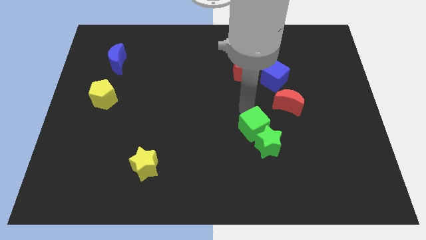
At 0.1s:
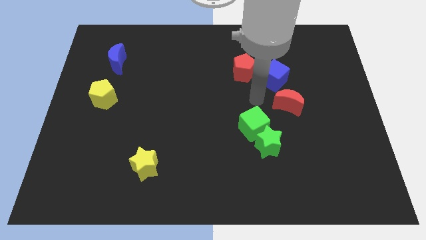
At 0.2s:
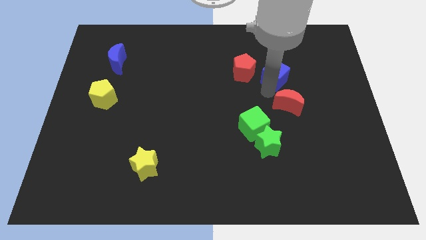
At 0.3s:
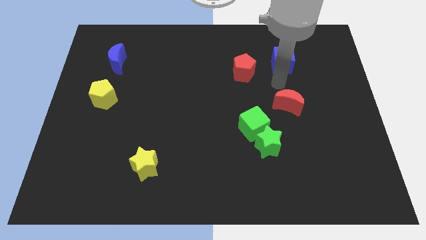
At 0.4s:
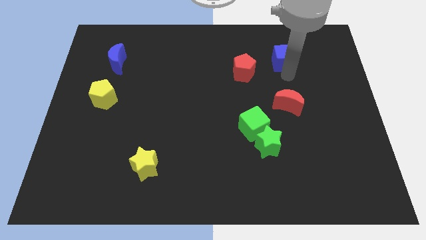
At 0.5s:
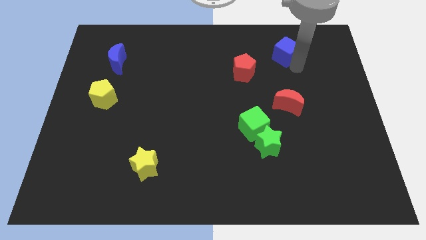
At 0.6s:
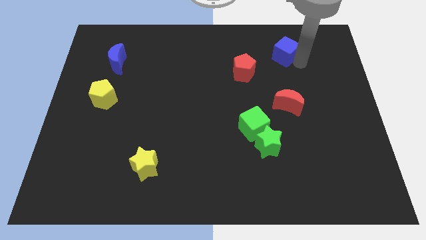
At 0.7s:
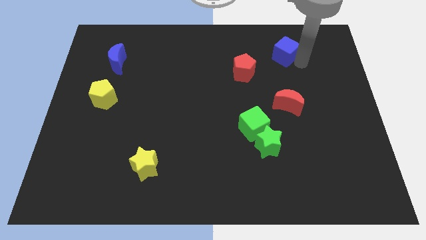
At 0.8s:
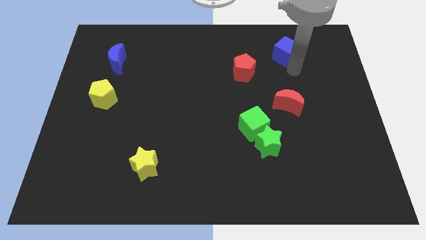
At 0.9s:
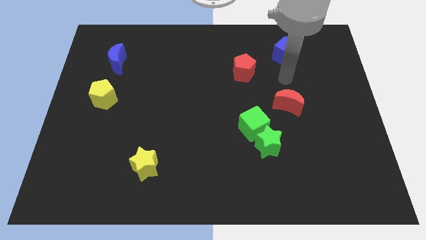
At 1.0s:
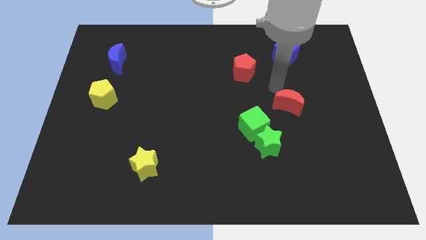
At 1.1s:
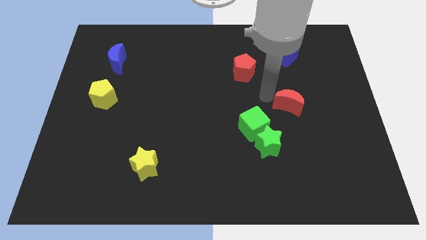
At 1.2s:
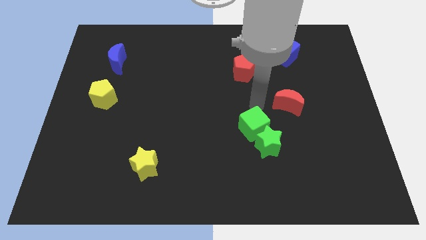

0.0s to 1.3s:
slide the blue cube to the top right side of the board

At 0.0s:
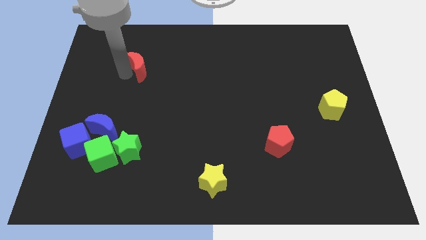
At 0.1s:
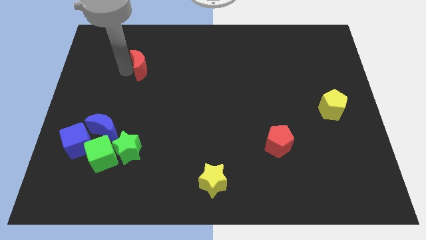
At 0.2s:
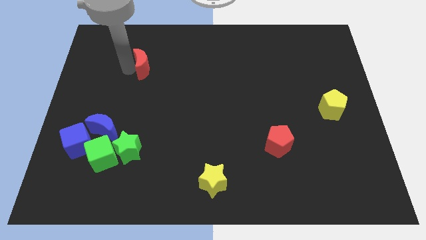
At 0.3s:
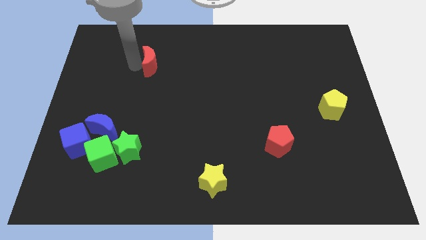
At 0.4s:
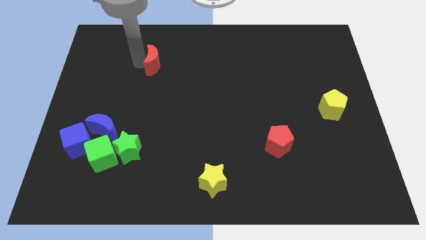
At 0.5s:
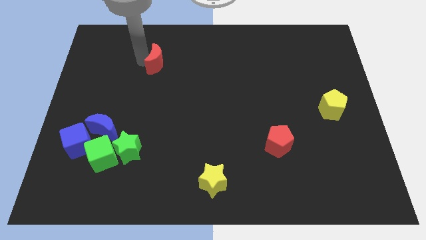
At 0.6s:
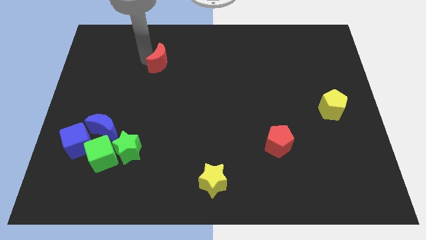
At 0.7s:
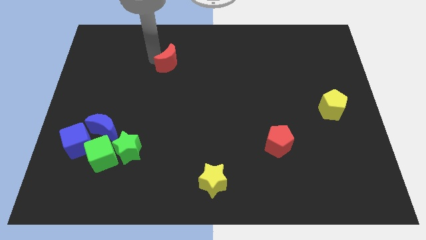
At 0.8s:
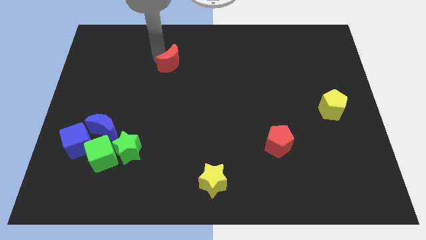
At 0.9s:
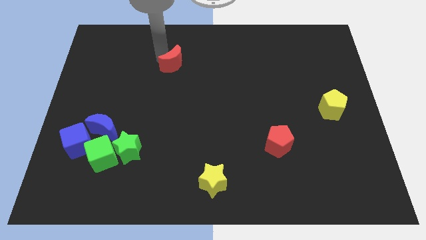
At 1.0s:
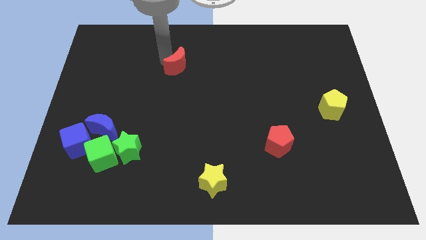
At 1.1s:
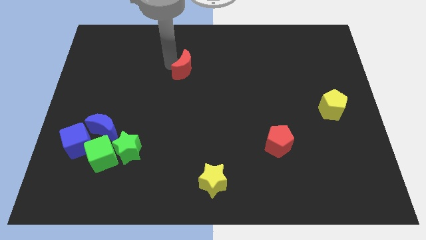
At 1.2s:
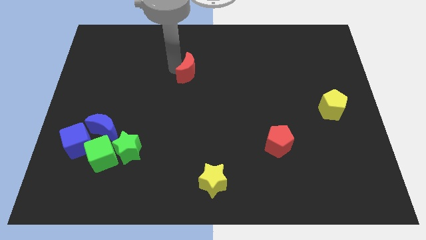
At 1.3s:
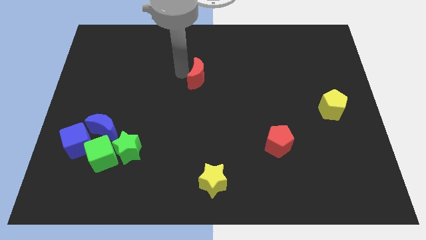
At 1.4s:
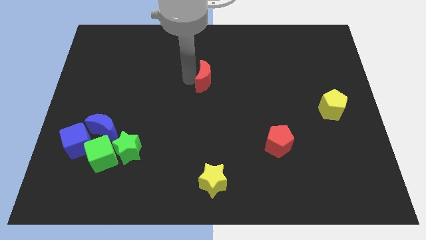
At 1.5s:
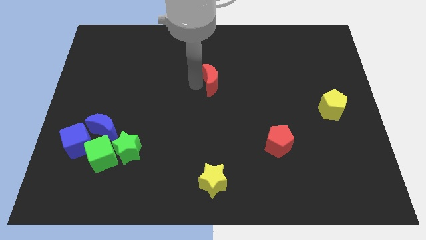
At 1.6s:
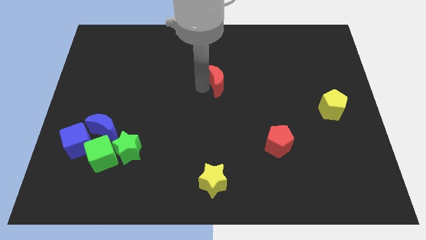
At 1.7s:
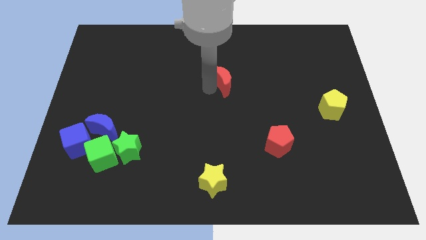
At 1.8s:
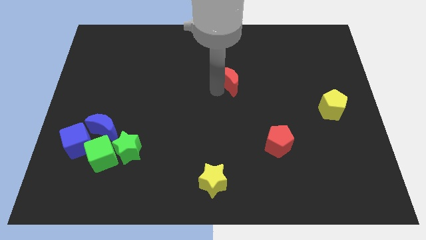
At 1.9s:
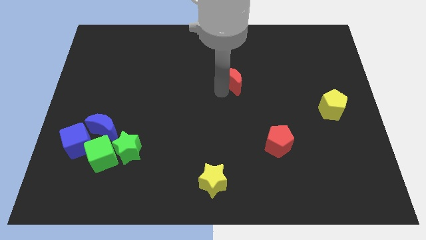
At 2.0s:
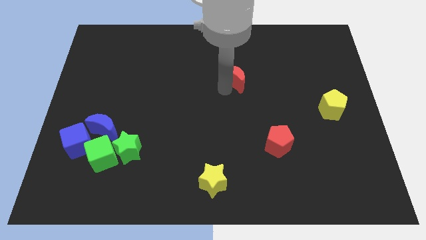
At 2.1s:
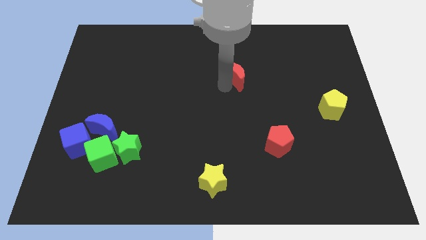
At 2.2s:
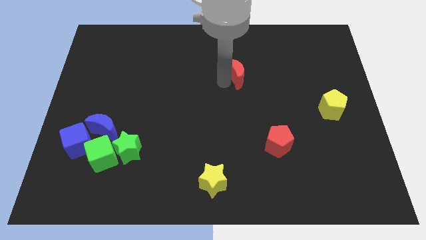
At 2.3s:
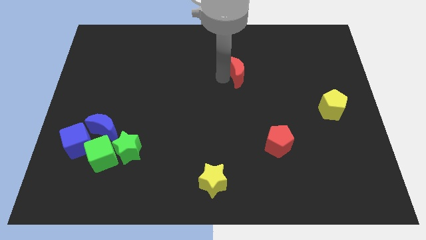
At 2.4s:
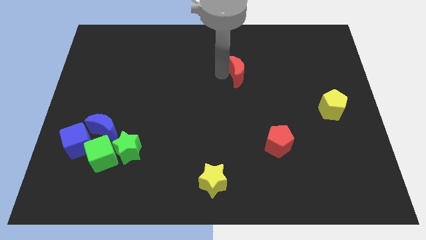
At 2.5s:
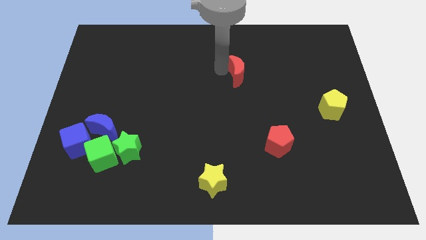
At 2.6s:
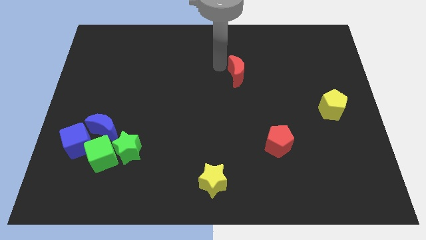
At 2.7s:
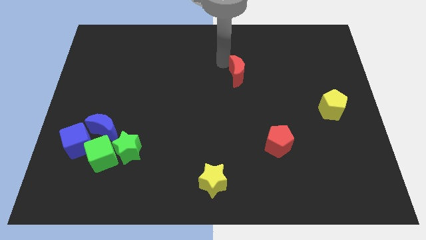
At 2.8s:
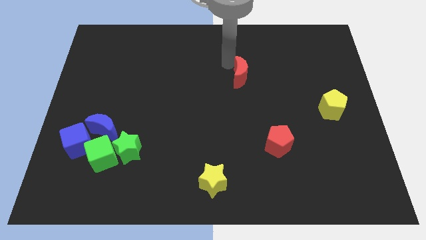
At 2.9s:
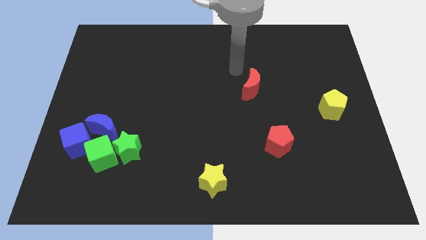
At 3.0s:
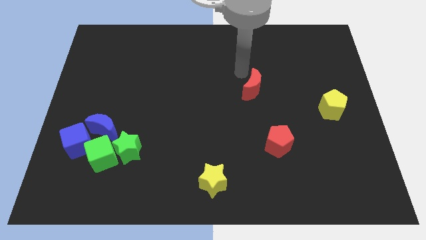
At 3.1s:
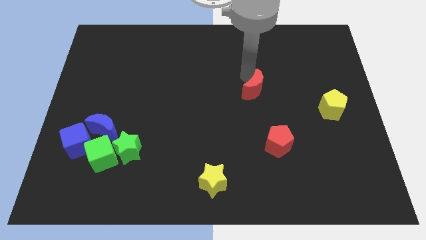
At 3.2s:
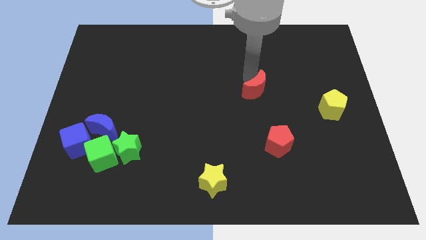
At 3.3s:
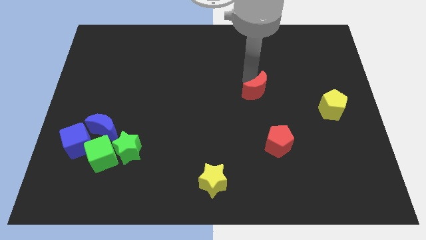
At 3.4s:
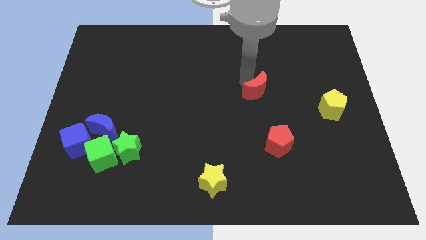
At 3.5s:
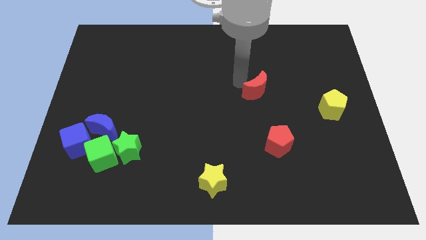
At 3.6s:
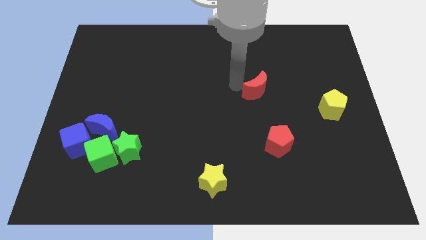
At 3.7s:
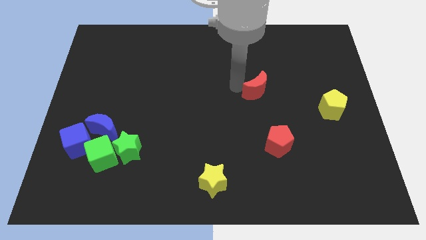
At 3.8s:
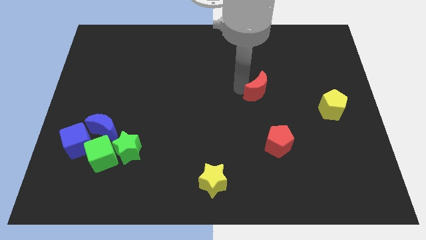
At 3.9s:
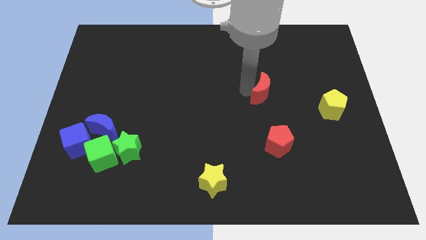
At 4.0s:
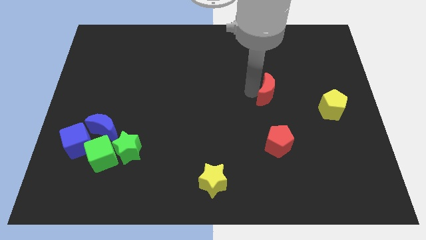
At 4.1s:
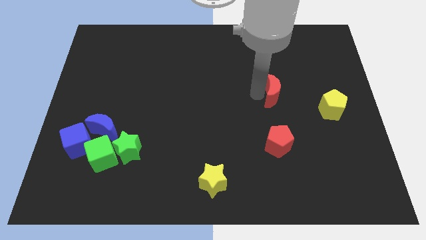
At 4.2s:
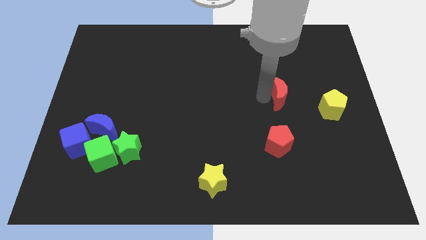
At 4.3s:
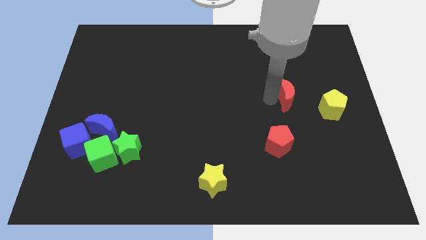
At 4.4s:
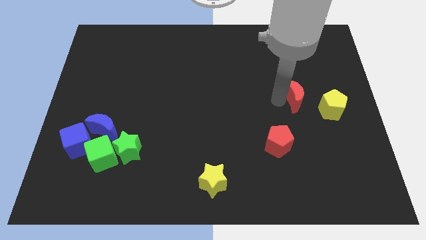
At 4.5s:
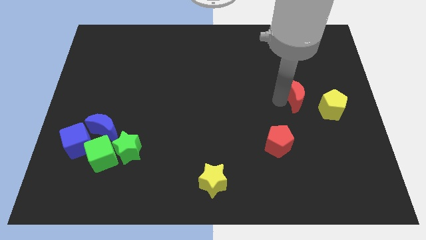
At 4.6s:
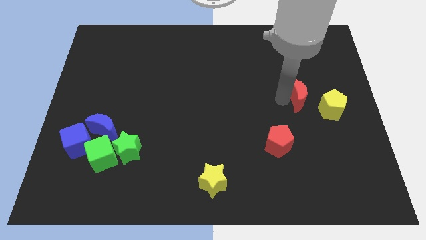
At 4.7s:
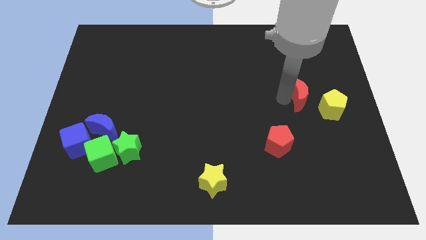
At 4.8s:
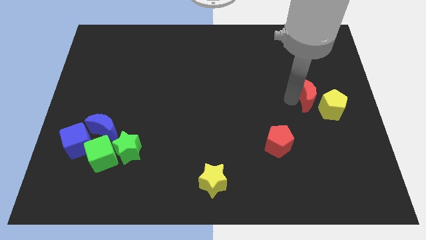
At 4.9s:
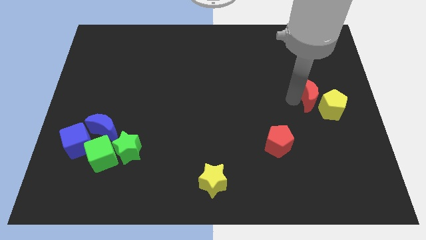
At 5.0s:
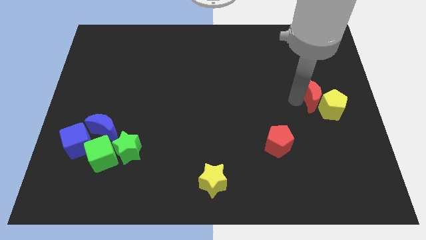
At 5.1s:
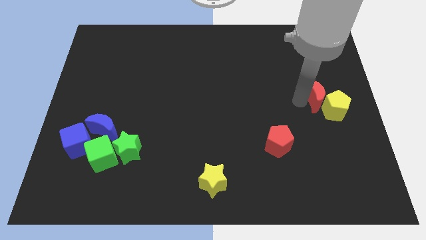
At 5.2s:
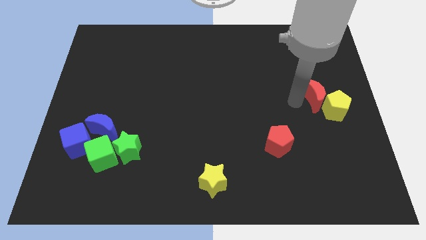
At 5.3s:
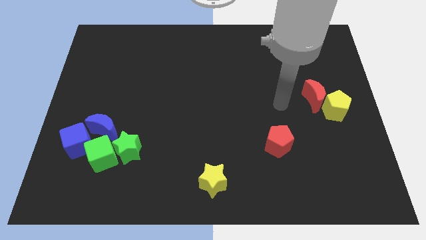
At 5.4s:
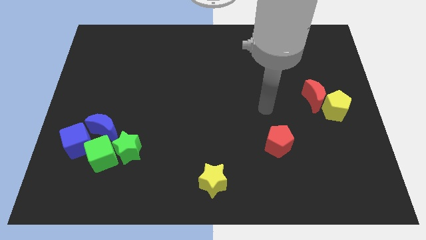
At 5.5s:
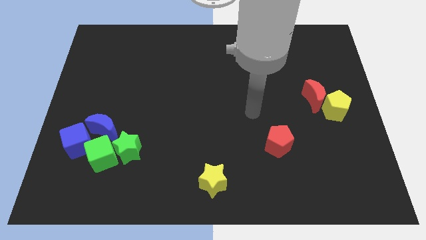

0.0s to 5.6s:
place the red crescent towards the left side of the yellow pentagon

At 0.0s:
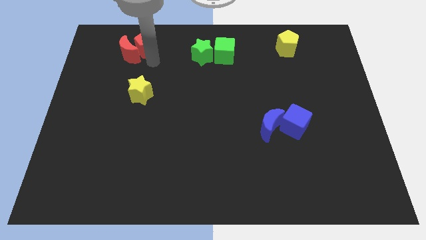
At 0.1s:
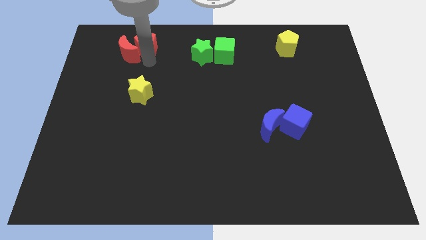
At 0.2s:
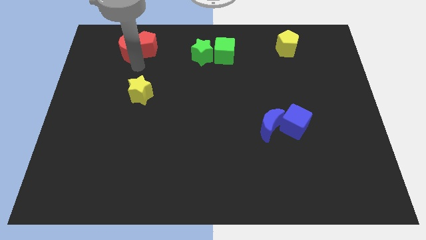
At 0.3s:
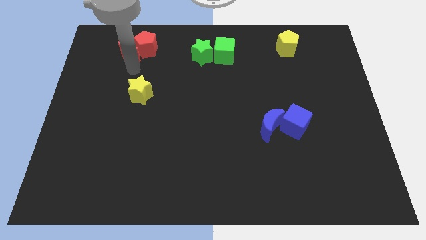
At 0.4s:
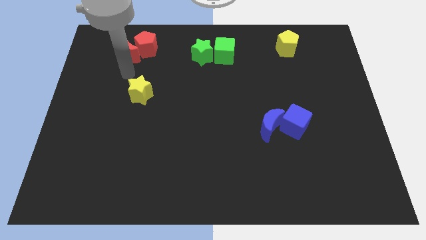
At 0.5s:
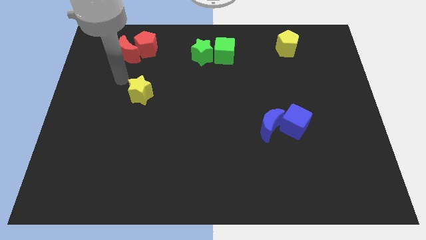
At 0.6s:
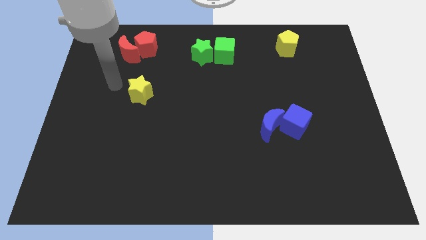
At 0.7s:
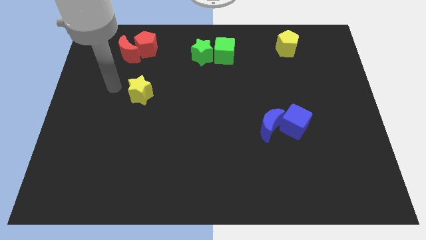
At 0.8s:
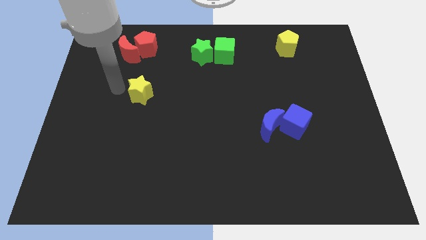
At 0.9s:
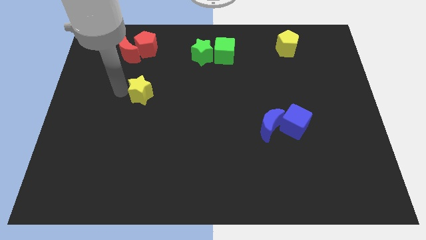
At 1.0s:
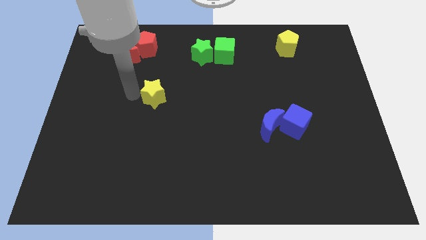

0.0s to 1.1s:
move your arm to the left side of the yellow star

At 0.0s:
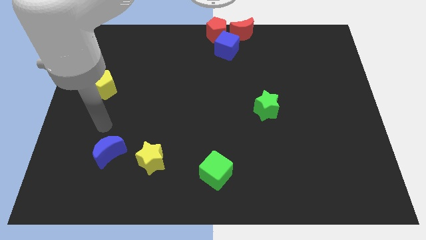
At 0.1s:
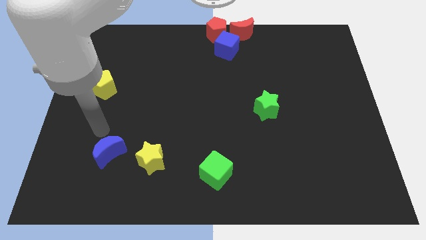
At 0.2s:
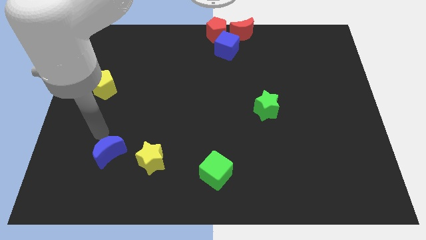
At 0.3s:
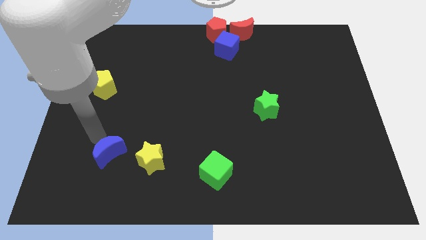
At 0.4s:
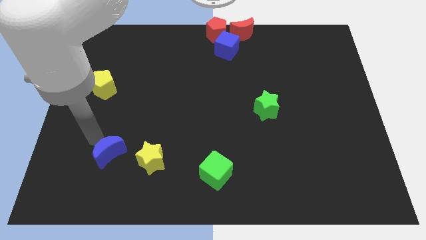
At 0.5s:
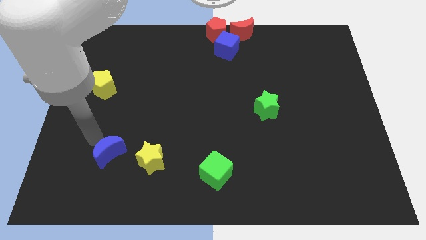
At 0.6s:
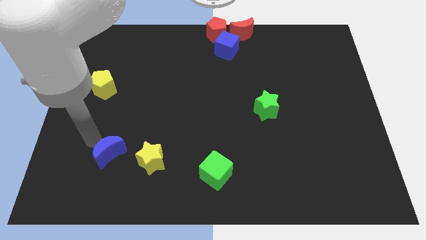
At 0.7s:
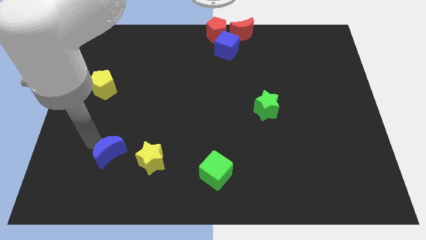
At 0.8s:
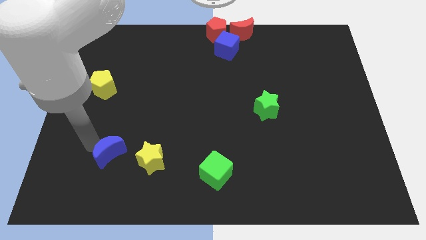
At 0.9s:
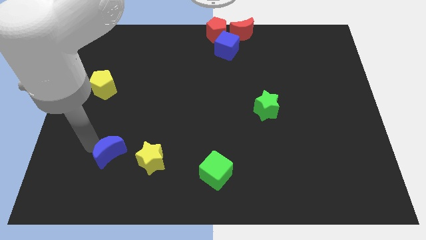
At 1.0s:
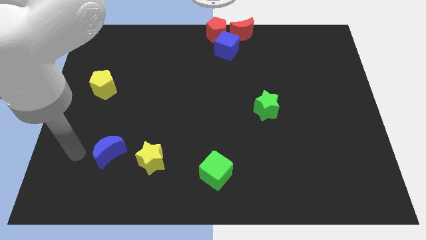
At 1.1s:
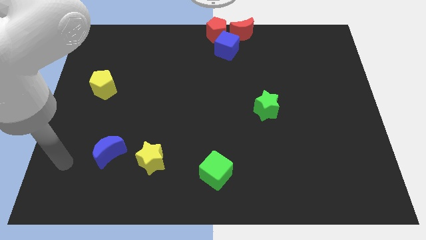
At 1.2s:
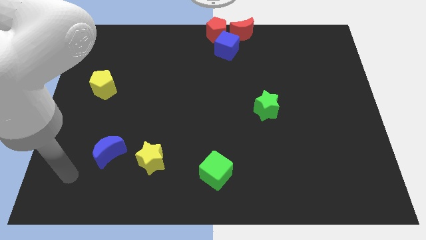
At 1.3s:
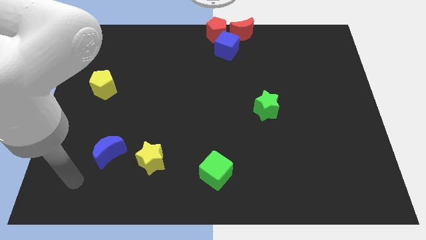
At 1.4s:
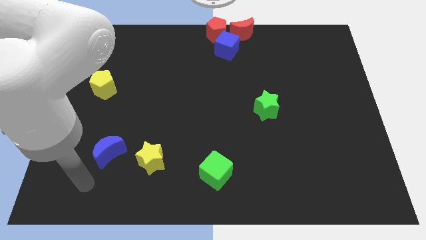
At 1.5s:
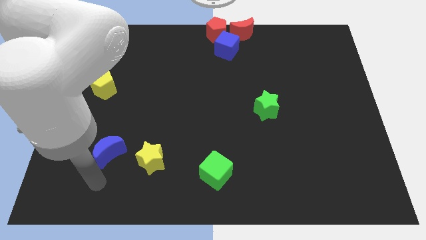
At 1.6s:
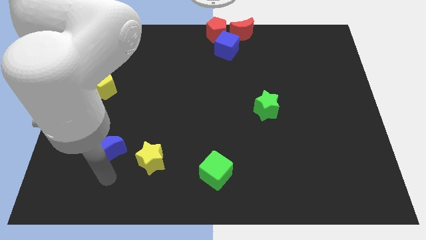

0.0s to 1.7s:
point your arm at the bottom side of the blue moon
